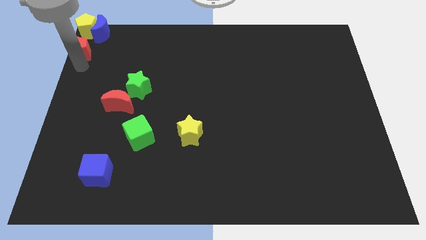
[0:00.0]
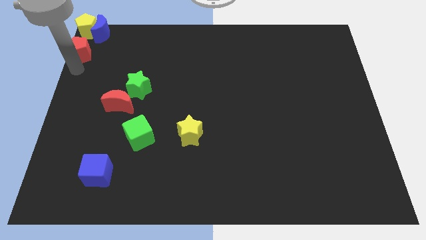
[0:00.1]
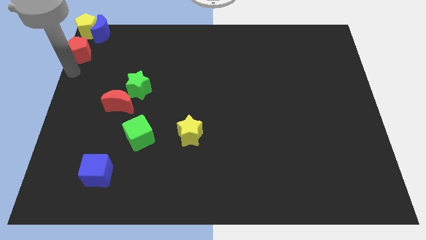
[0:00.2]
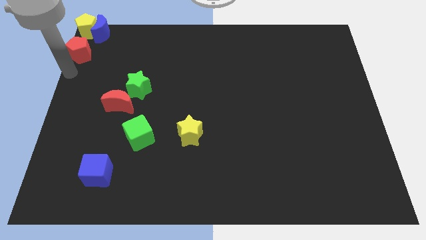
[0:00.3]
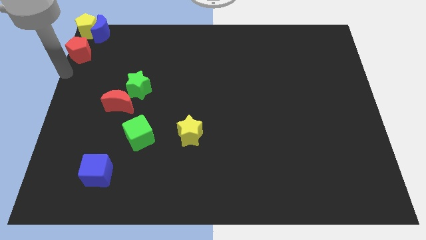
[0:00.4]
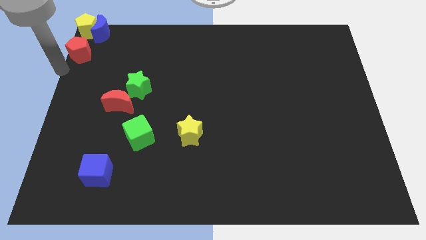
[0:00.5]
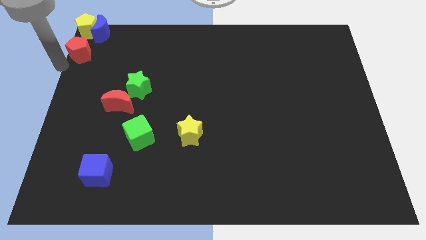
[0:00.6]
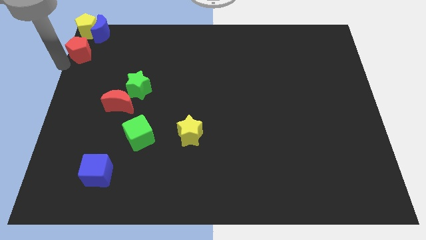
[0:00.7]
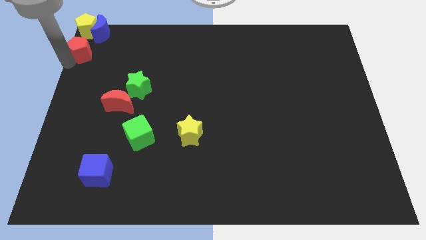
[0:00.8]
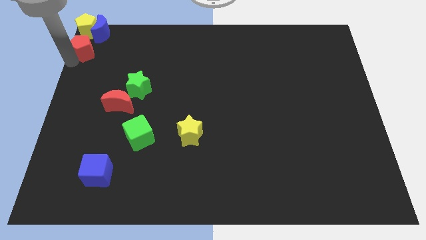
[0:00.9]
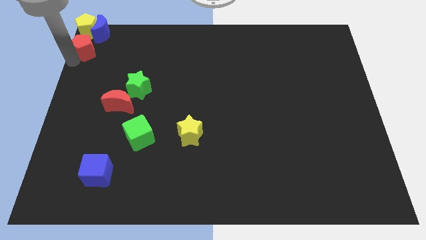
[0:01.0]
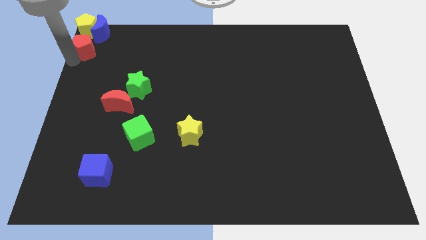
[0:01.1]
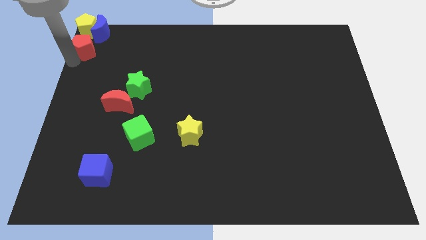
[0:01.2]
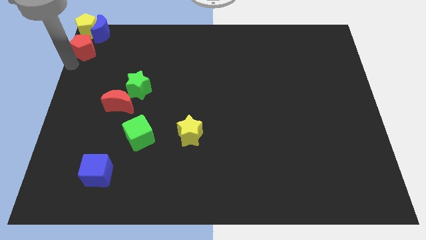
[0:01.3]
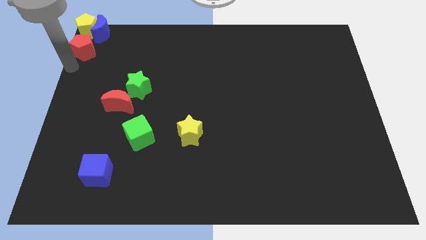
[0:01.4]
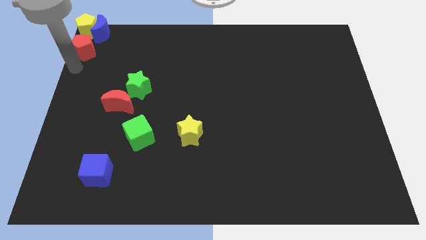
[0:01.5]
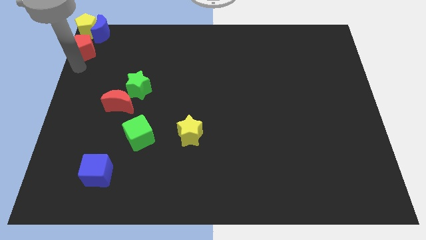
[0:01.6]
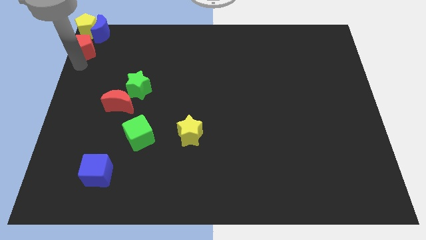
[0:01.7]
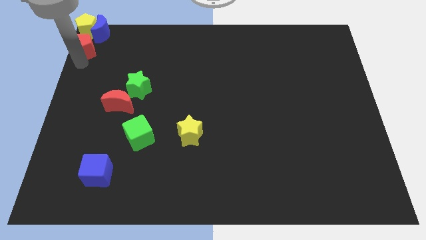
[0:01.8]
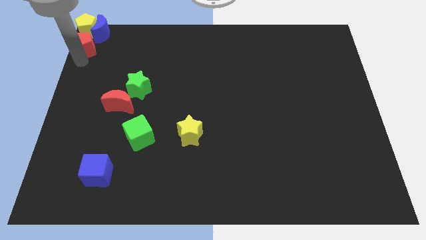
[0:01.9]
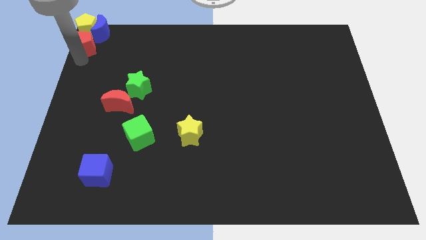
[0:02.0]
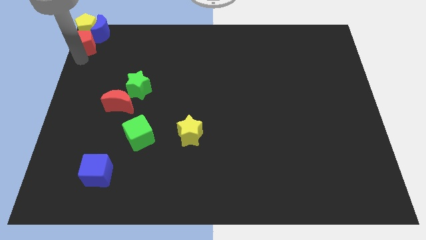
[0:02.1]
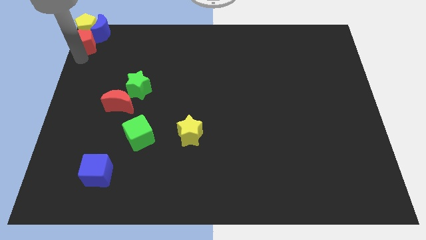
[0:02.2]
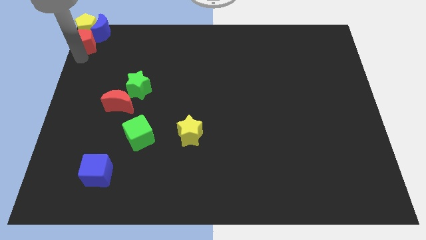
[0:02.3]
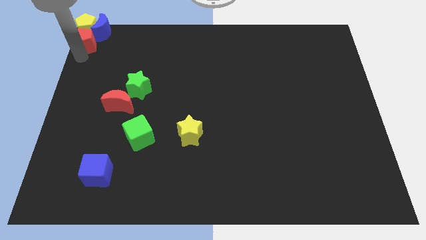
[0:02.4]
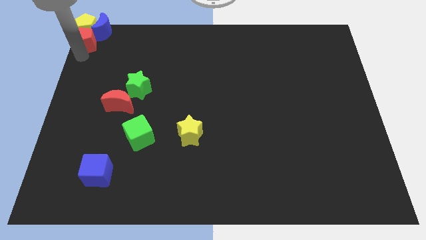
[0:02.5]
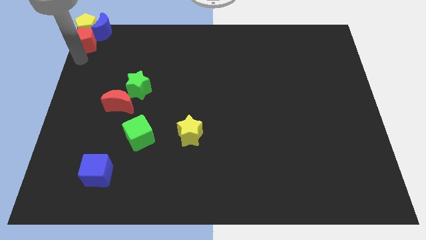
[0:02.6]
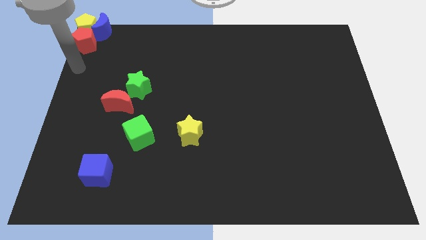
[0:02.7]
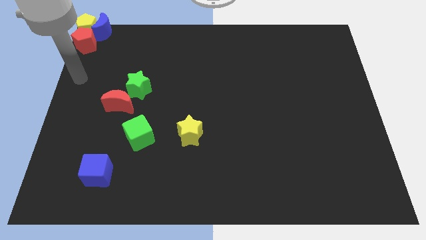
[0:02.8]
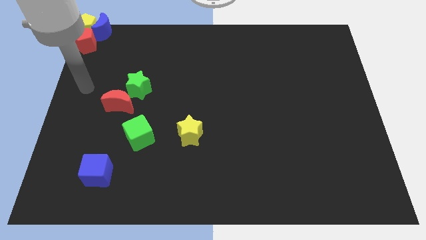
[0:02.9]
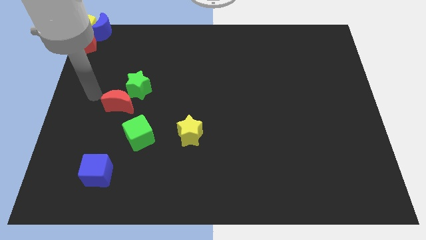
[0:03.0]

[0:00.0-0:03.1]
push the red pentagon into the blue moon and the yellow pentagon

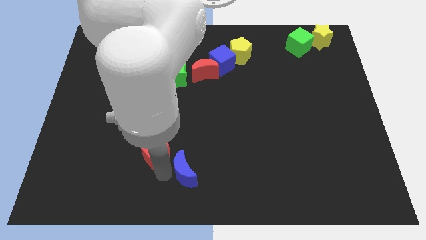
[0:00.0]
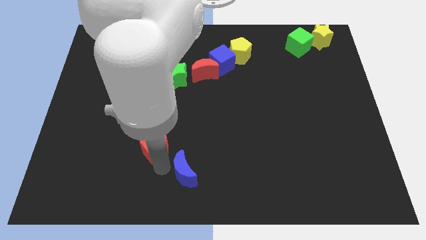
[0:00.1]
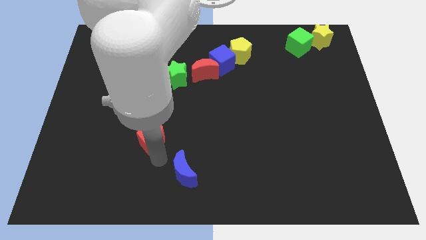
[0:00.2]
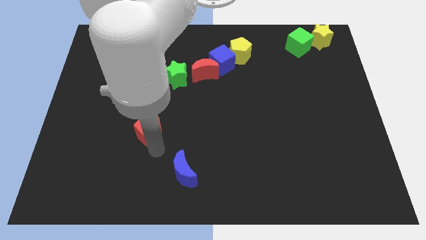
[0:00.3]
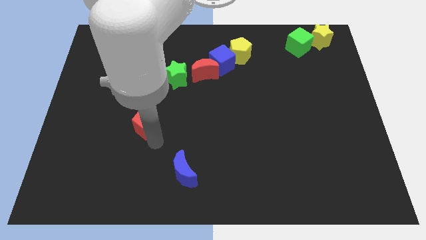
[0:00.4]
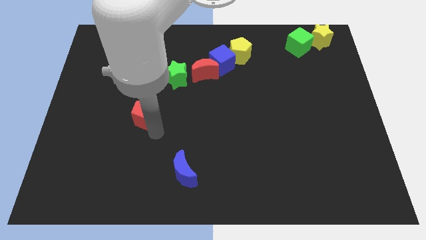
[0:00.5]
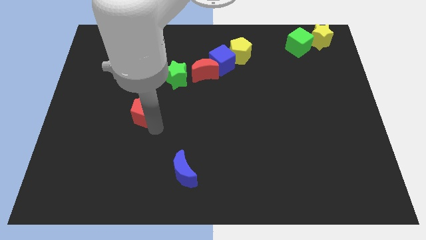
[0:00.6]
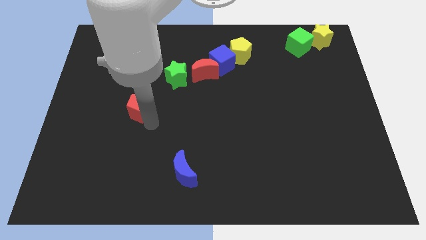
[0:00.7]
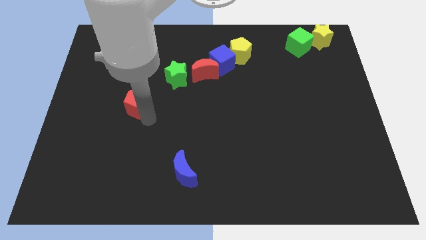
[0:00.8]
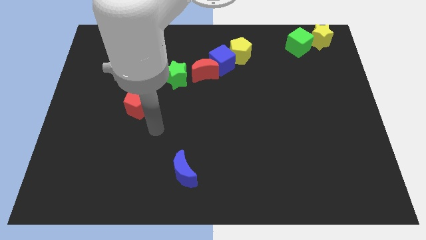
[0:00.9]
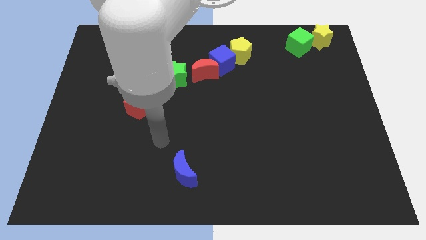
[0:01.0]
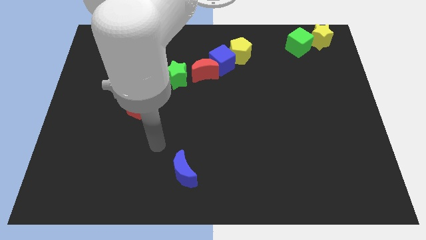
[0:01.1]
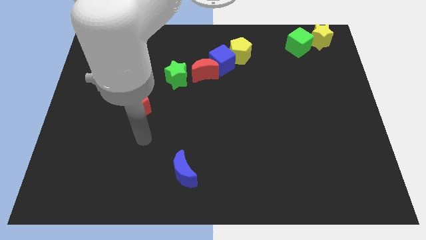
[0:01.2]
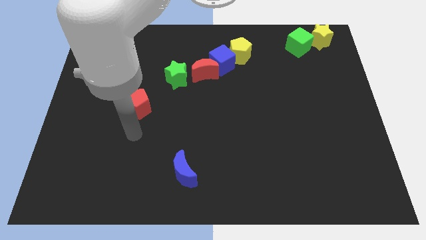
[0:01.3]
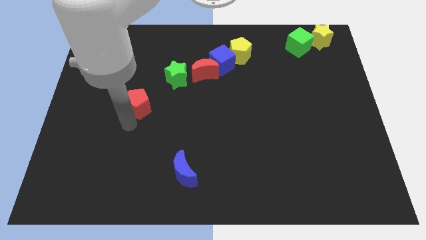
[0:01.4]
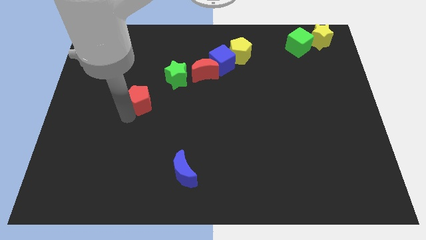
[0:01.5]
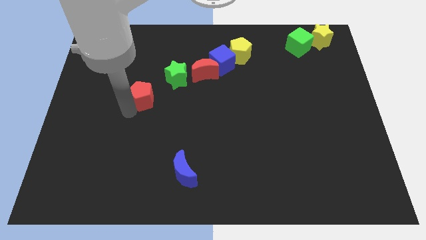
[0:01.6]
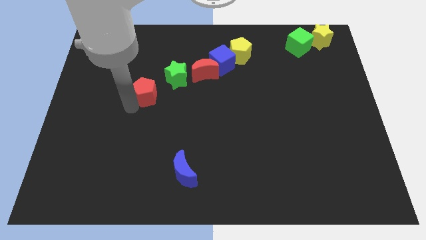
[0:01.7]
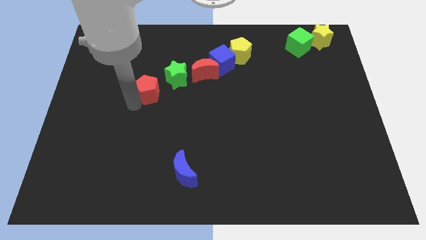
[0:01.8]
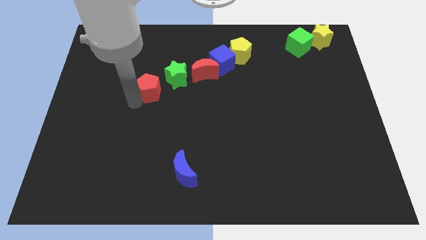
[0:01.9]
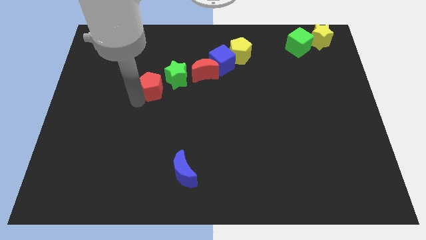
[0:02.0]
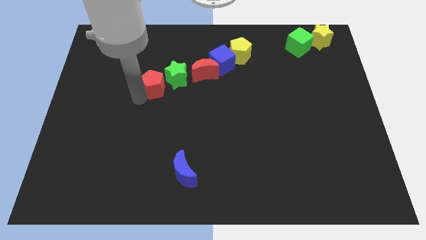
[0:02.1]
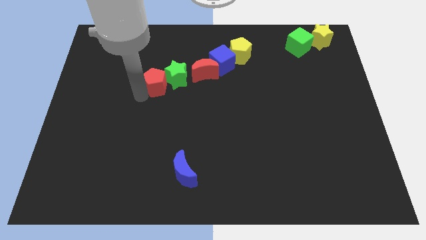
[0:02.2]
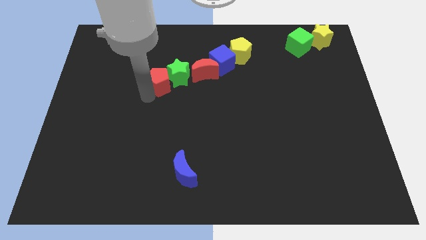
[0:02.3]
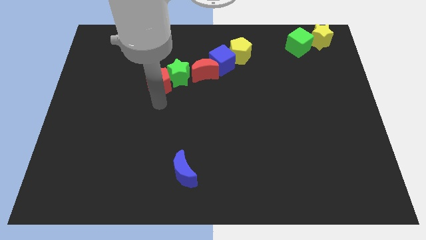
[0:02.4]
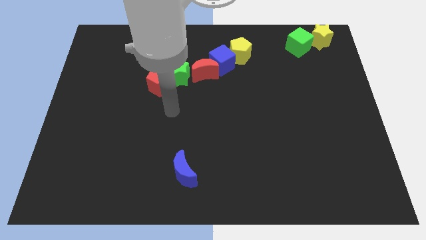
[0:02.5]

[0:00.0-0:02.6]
push the red pentagon to the left of the green star

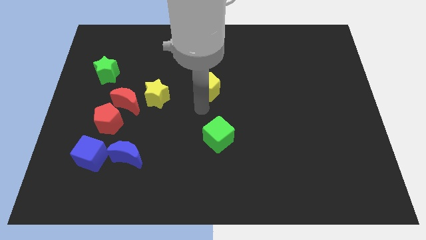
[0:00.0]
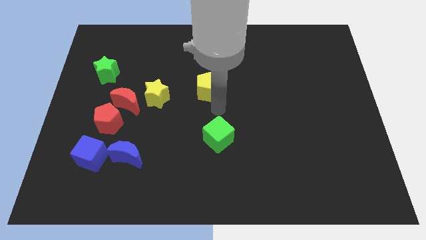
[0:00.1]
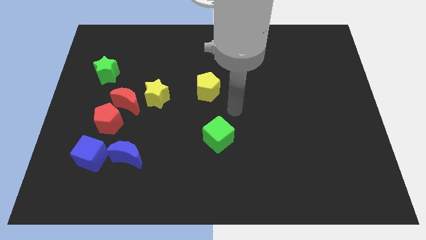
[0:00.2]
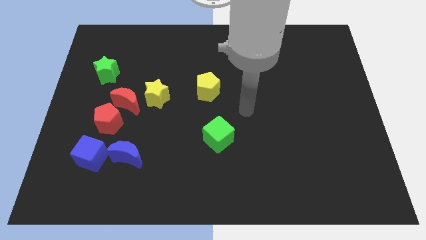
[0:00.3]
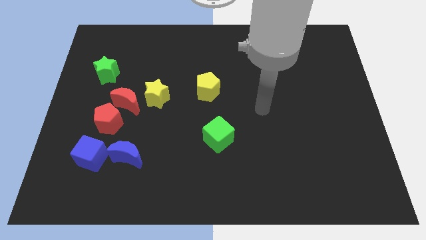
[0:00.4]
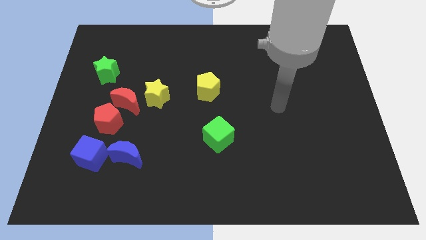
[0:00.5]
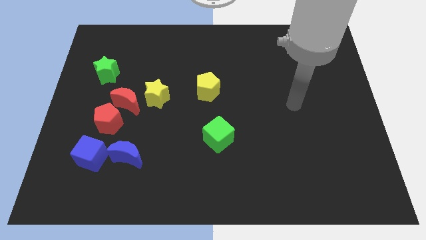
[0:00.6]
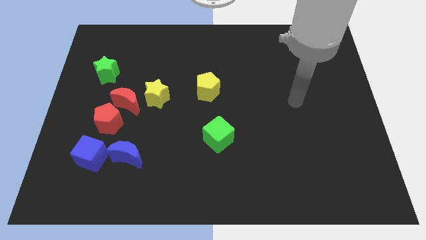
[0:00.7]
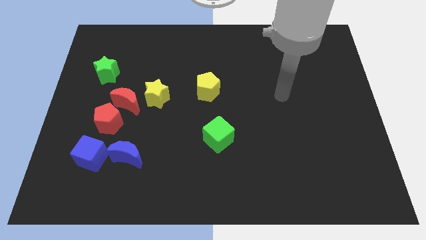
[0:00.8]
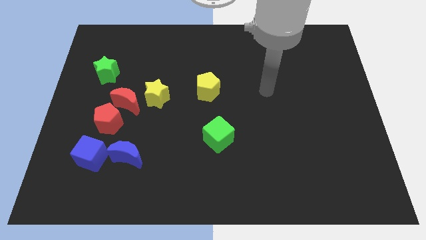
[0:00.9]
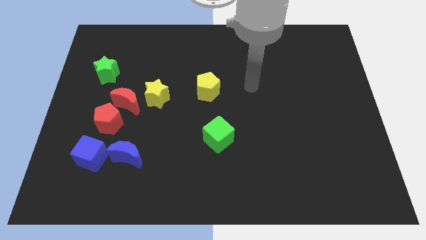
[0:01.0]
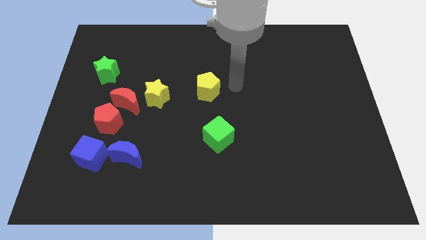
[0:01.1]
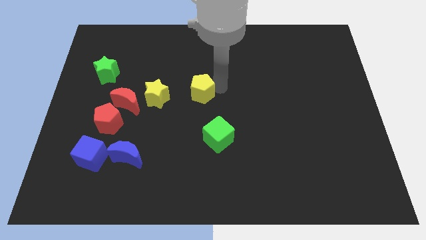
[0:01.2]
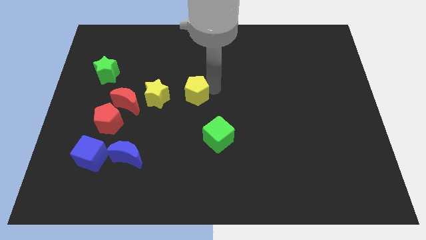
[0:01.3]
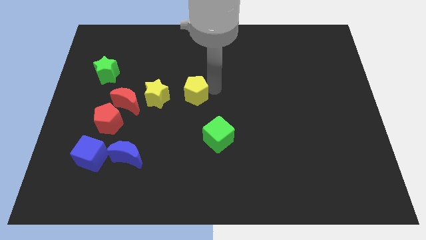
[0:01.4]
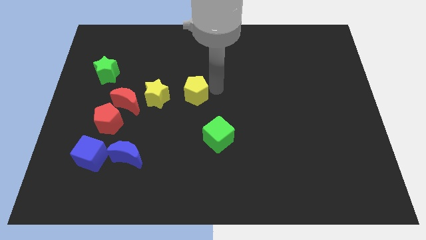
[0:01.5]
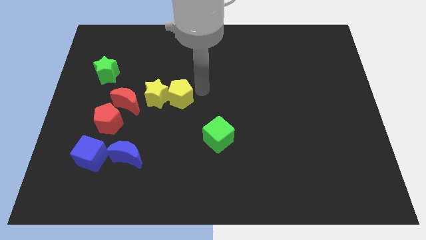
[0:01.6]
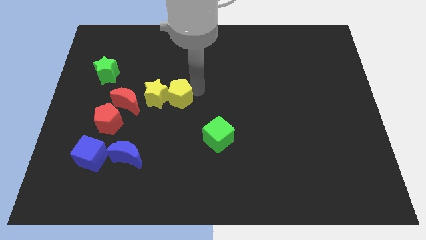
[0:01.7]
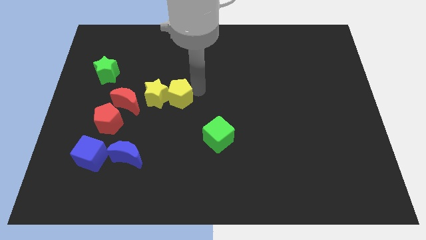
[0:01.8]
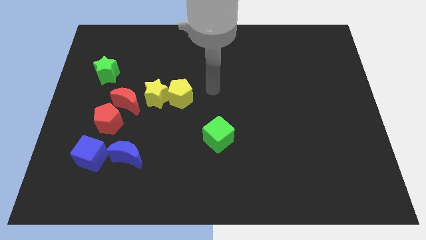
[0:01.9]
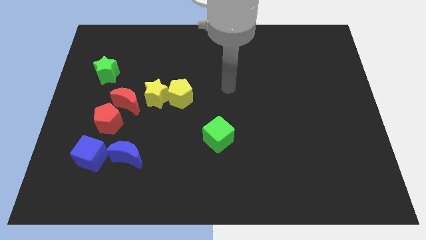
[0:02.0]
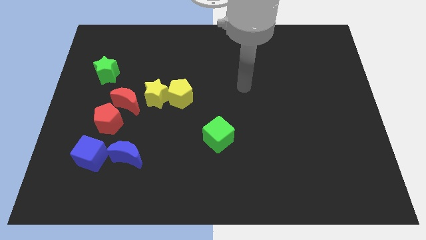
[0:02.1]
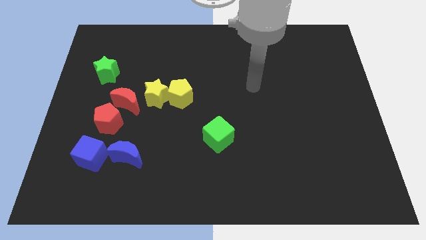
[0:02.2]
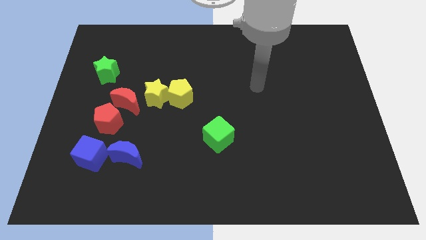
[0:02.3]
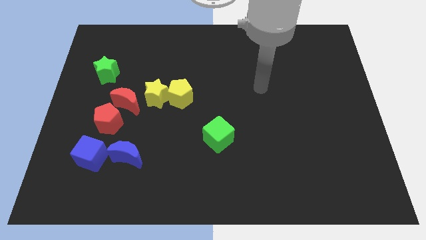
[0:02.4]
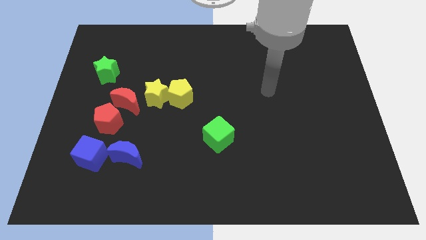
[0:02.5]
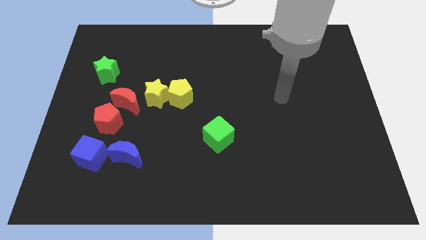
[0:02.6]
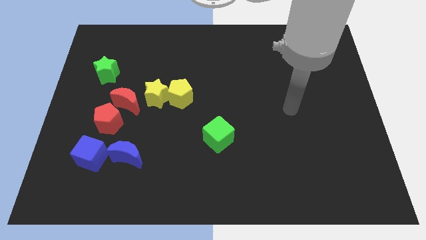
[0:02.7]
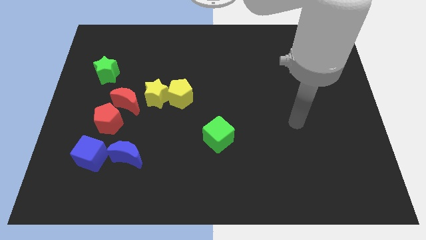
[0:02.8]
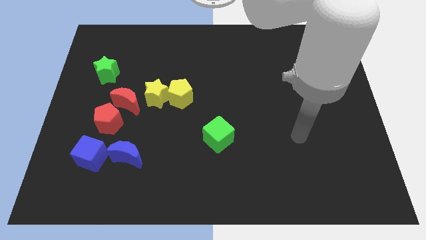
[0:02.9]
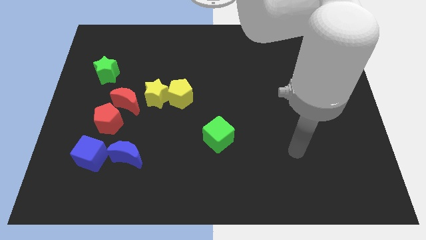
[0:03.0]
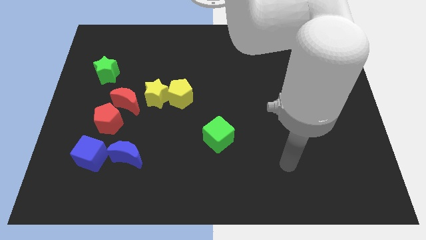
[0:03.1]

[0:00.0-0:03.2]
move the yellow pentagon into the yellow star

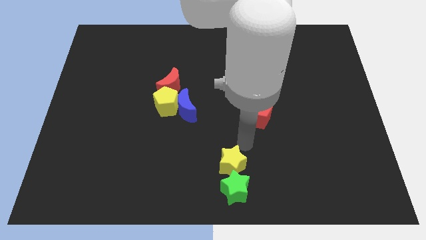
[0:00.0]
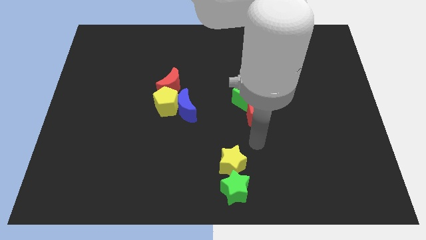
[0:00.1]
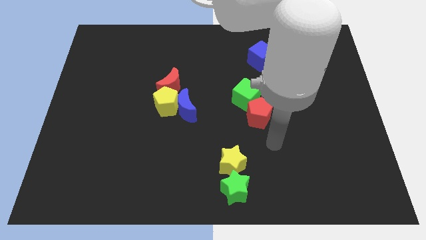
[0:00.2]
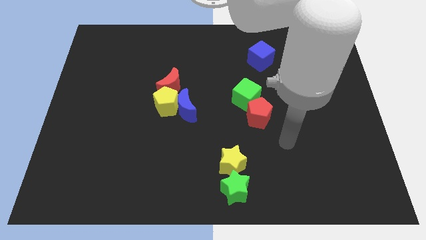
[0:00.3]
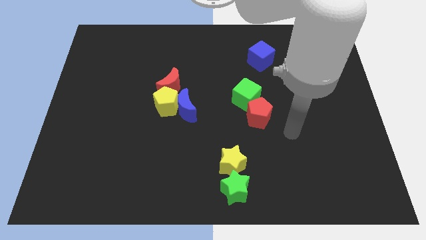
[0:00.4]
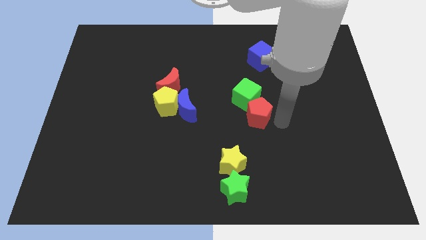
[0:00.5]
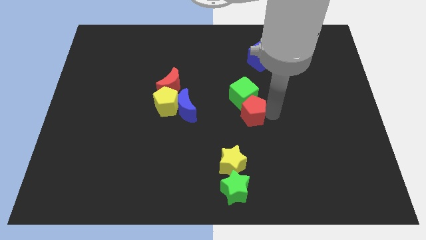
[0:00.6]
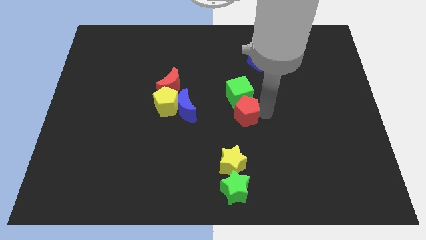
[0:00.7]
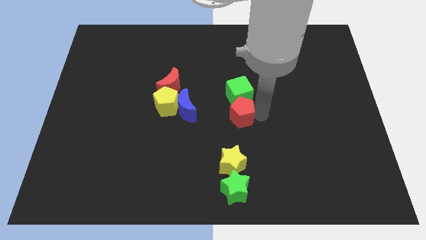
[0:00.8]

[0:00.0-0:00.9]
point your arm right to red pentagon
